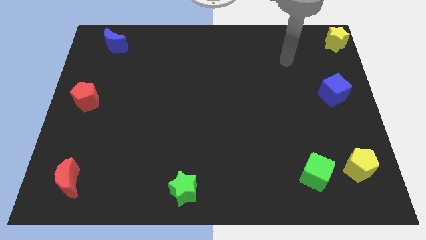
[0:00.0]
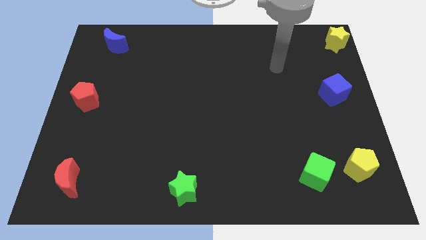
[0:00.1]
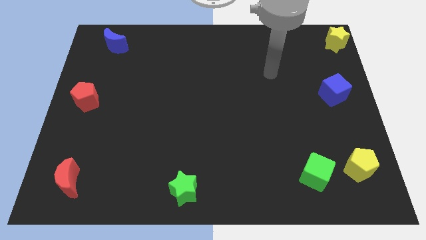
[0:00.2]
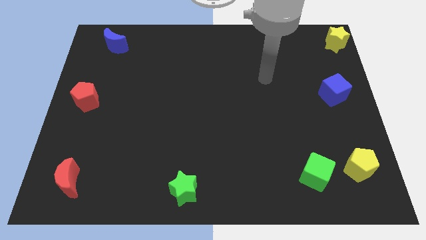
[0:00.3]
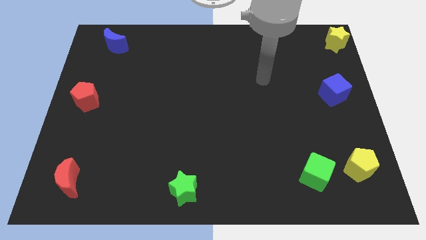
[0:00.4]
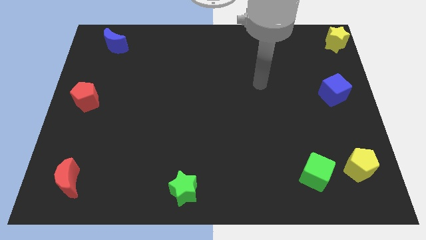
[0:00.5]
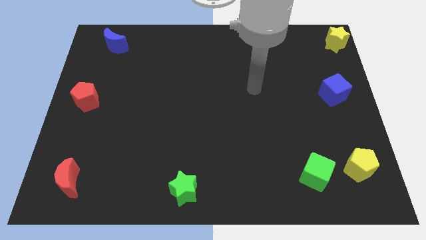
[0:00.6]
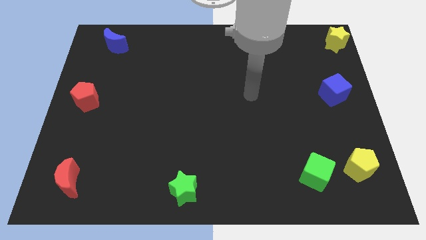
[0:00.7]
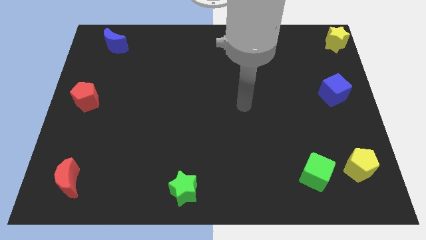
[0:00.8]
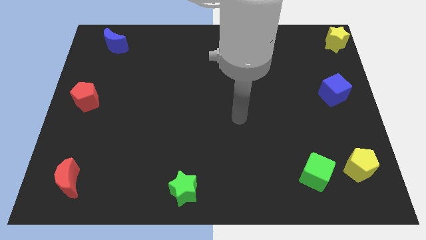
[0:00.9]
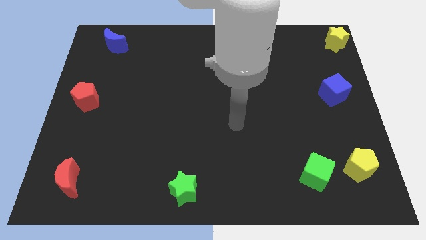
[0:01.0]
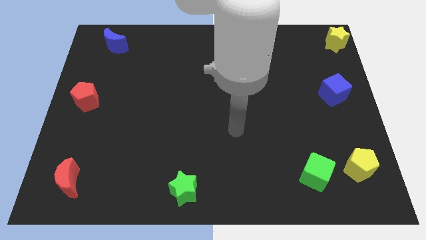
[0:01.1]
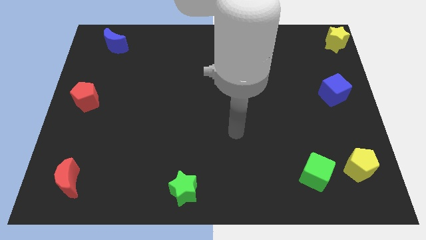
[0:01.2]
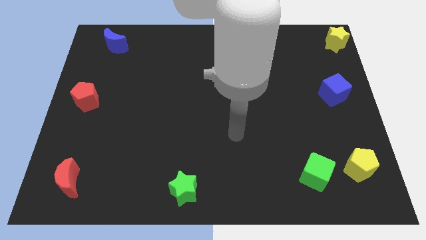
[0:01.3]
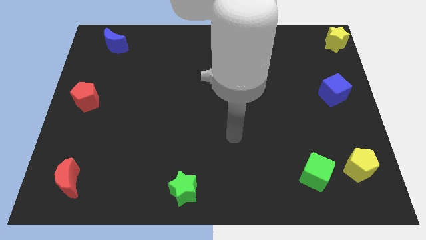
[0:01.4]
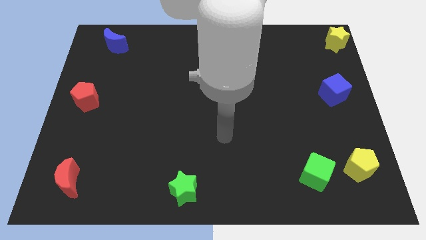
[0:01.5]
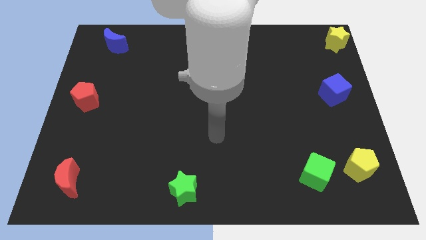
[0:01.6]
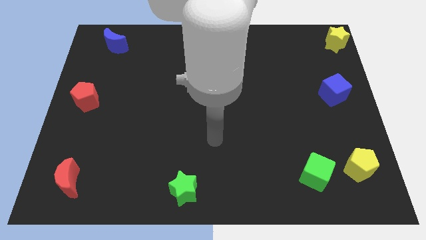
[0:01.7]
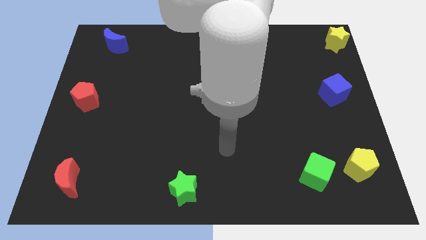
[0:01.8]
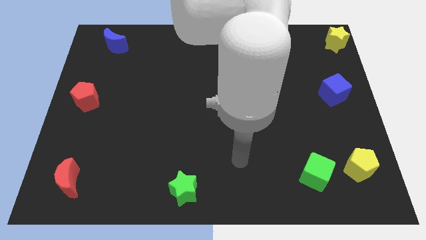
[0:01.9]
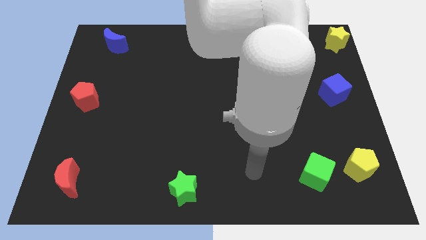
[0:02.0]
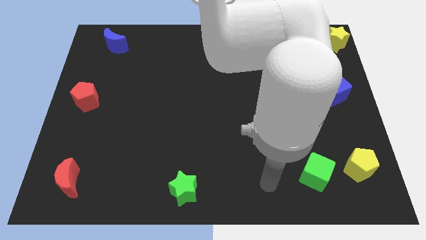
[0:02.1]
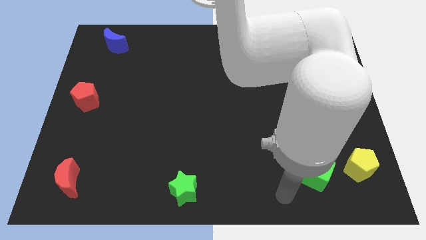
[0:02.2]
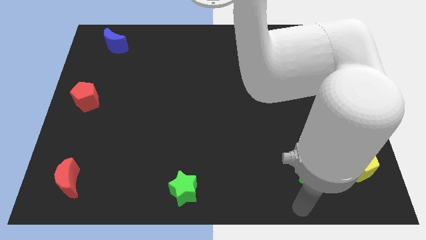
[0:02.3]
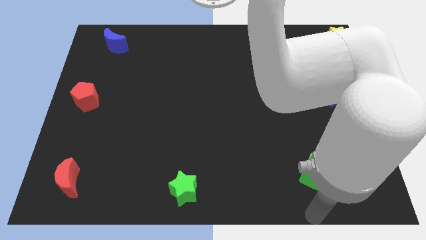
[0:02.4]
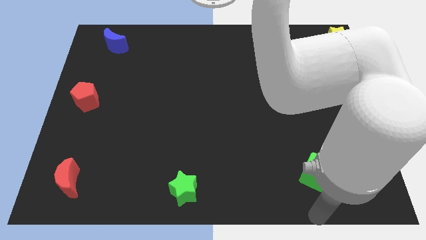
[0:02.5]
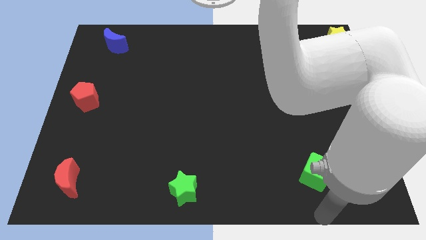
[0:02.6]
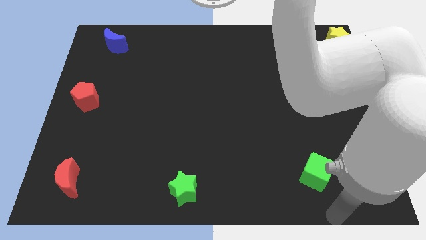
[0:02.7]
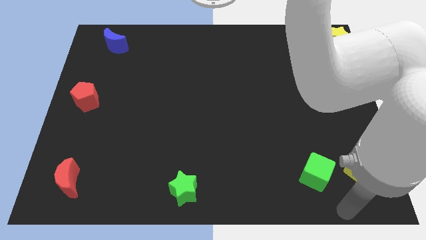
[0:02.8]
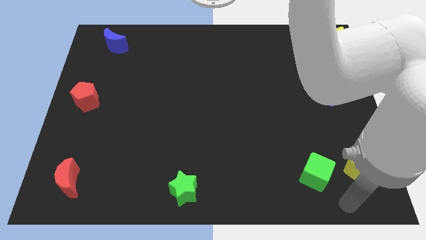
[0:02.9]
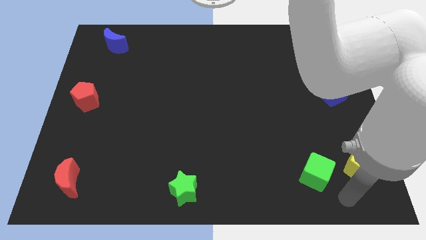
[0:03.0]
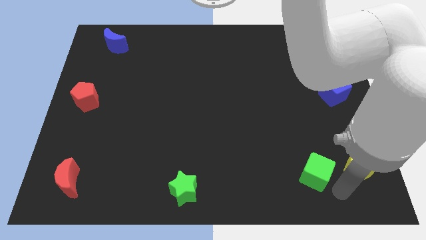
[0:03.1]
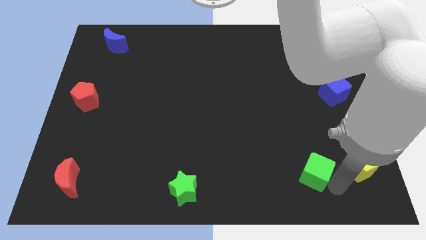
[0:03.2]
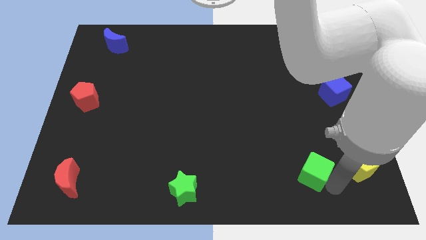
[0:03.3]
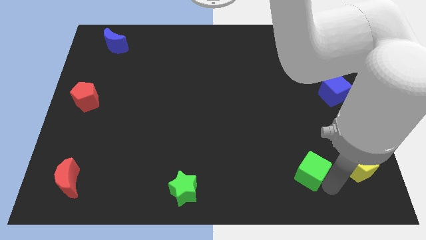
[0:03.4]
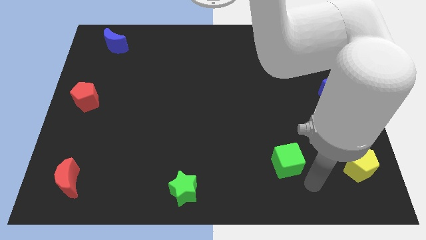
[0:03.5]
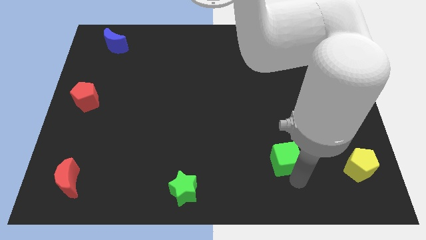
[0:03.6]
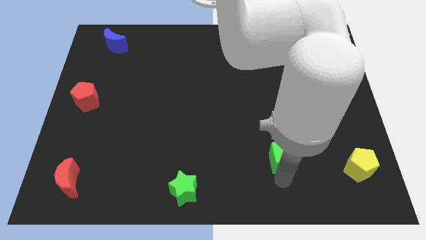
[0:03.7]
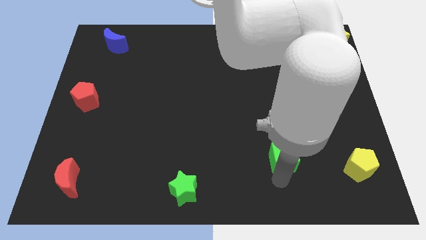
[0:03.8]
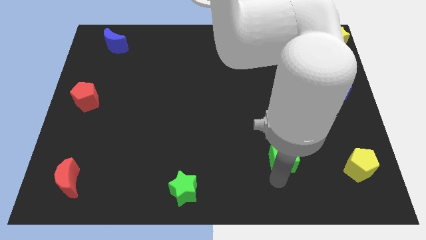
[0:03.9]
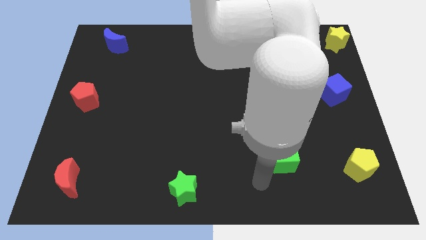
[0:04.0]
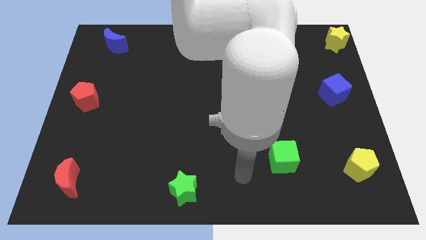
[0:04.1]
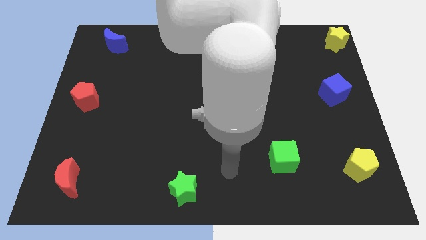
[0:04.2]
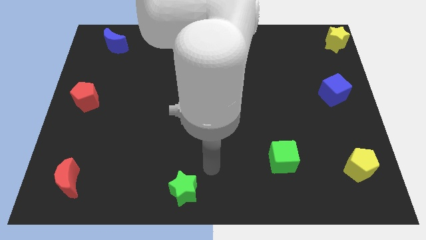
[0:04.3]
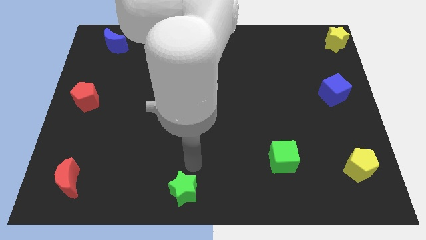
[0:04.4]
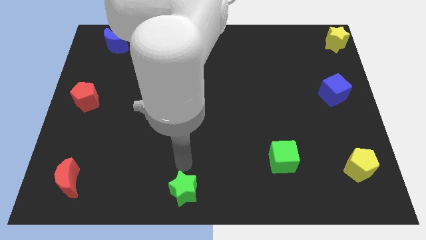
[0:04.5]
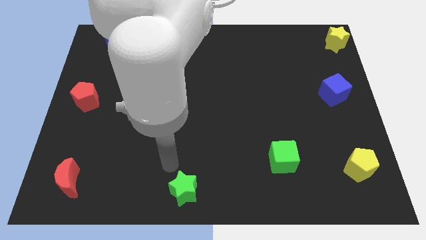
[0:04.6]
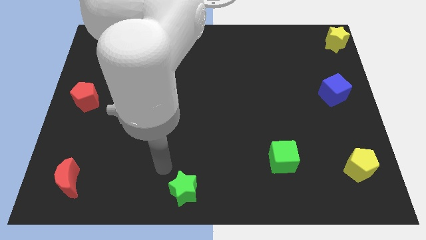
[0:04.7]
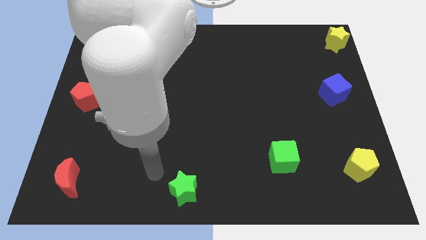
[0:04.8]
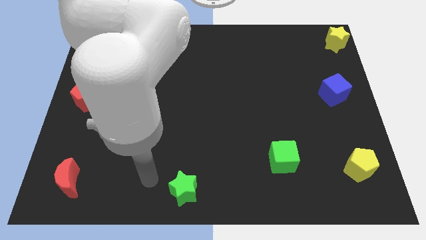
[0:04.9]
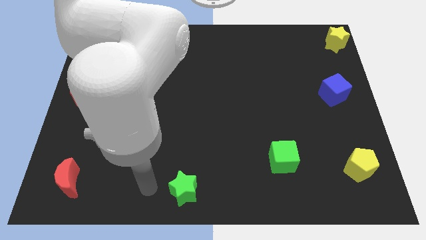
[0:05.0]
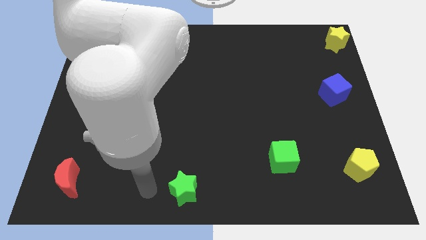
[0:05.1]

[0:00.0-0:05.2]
slide the green cube horizontally to the left side of the yellow pentagon

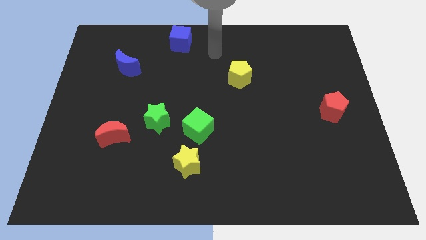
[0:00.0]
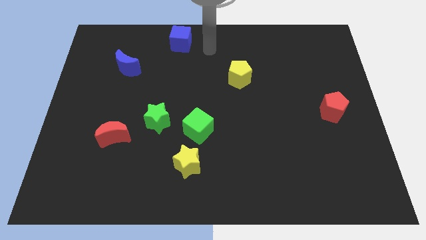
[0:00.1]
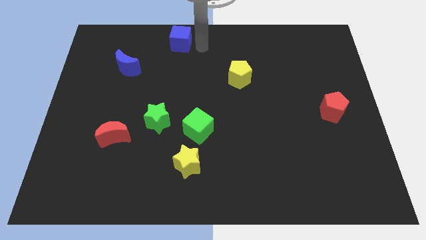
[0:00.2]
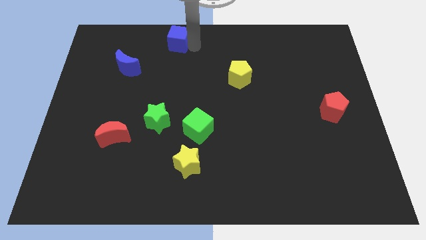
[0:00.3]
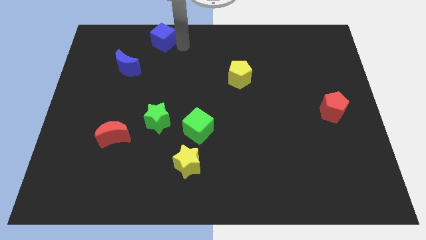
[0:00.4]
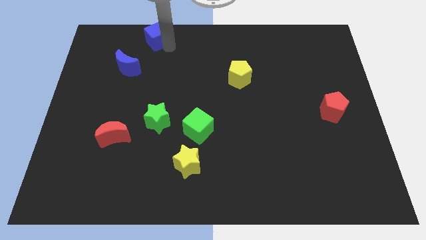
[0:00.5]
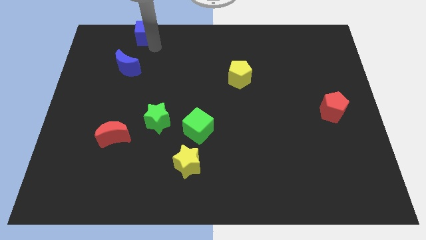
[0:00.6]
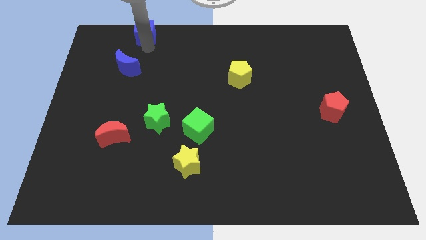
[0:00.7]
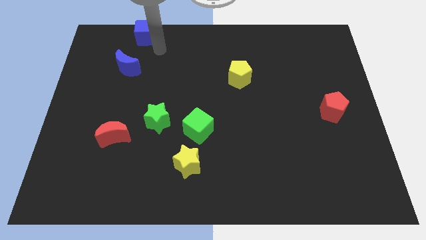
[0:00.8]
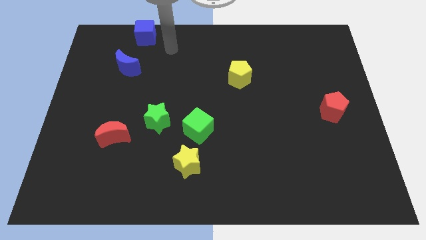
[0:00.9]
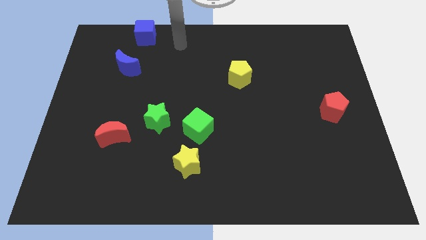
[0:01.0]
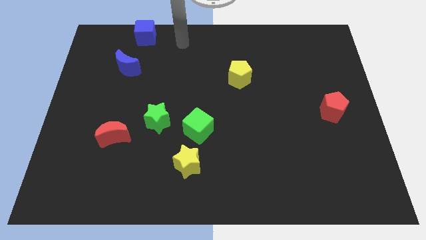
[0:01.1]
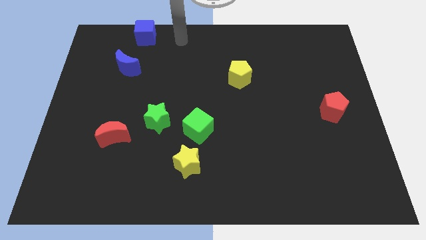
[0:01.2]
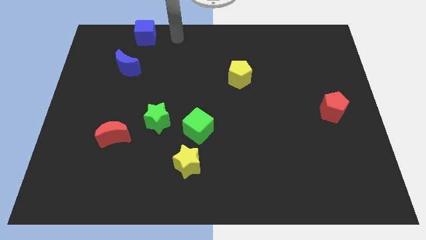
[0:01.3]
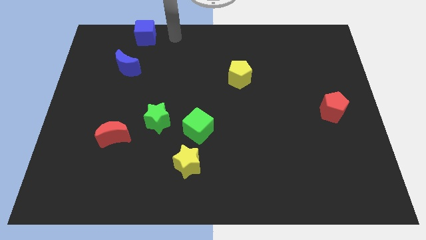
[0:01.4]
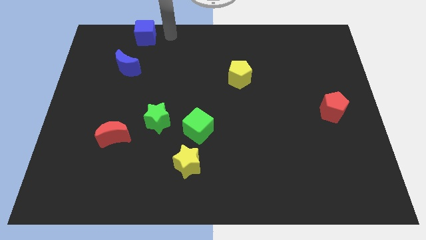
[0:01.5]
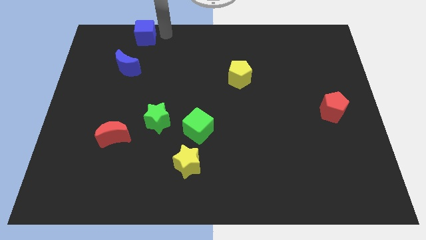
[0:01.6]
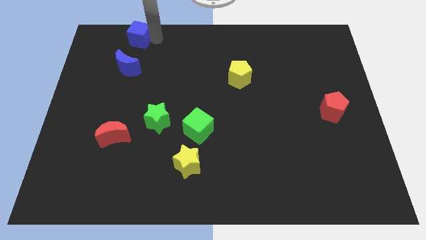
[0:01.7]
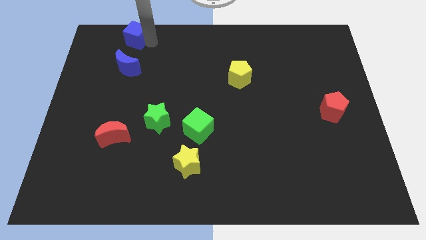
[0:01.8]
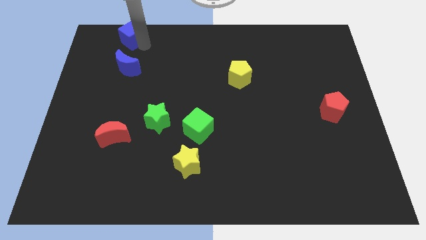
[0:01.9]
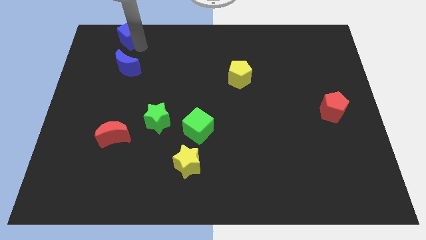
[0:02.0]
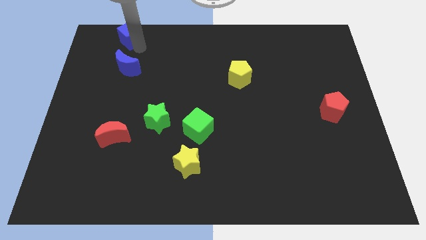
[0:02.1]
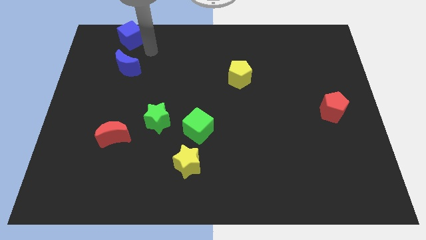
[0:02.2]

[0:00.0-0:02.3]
place the blue cube above the blue crescent

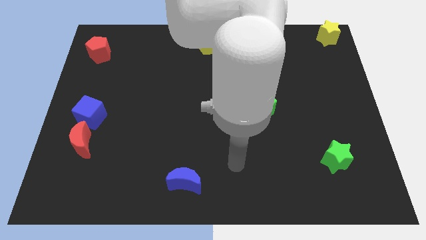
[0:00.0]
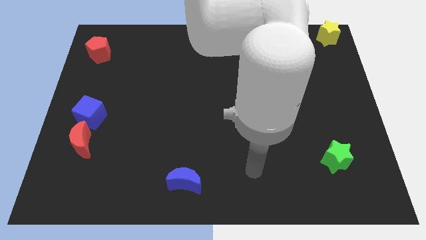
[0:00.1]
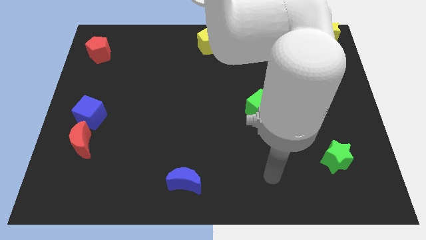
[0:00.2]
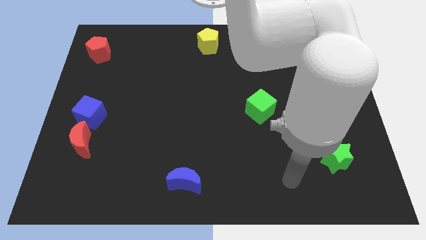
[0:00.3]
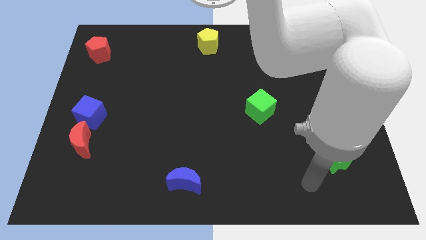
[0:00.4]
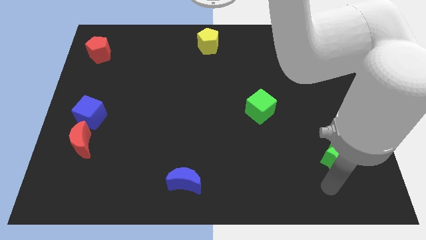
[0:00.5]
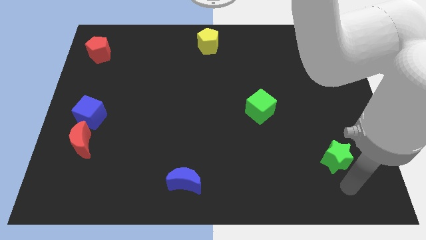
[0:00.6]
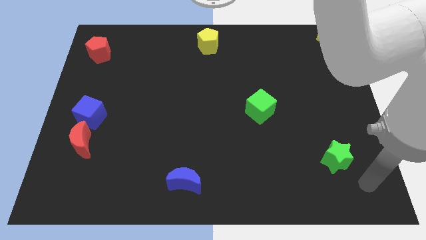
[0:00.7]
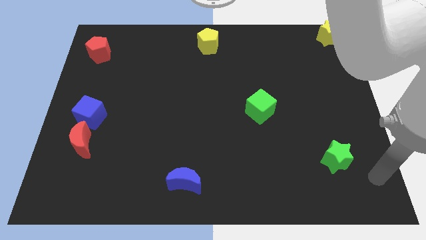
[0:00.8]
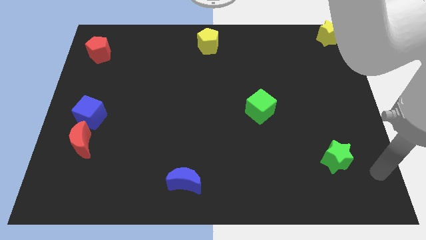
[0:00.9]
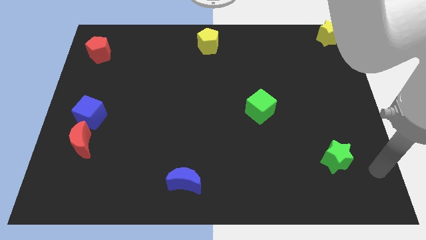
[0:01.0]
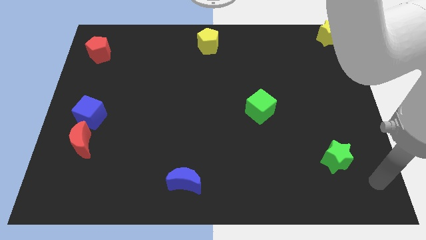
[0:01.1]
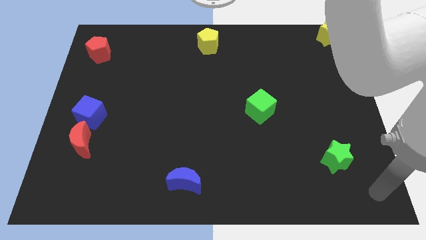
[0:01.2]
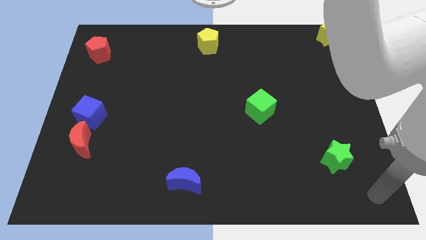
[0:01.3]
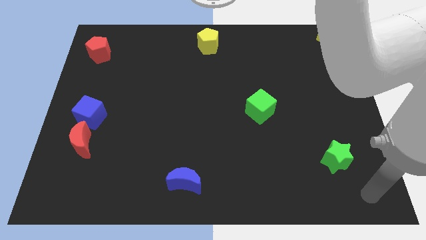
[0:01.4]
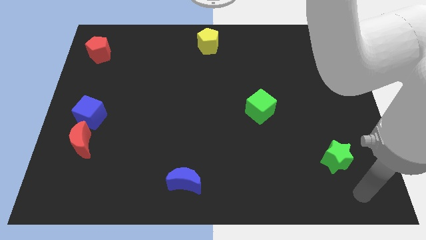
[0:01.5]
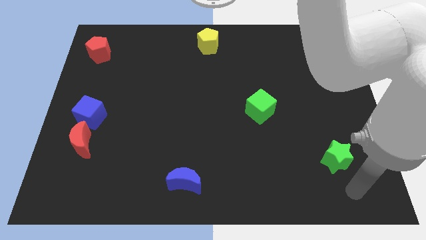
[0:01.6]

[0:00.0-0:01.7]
place your arm below green star
